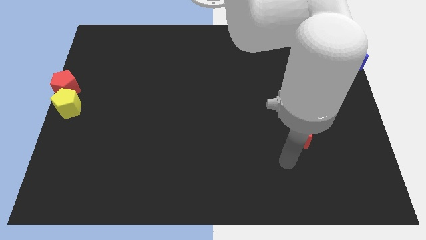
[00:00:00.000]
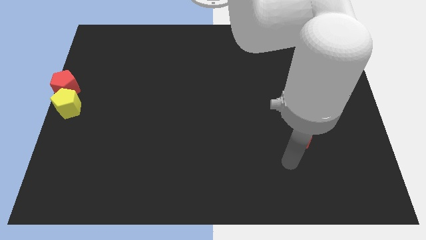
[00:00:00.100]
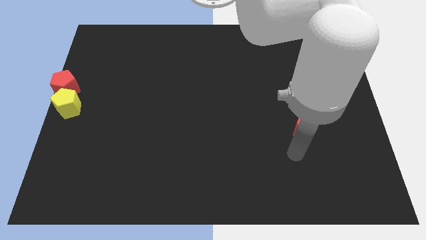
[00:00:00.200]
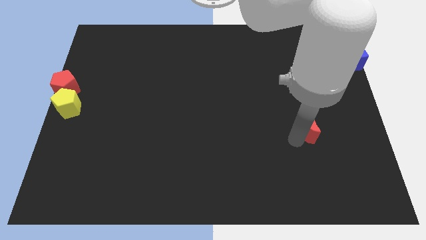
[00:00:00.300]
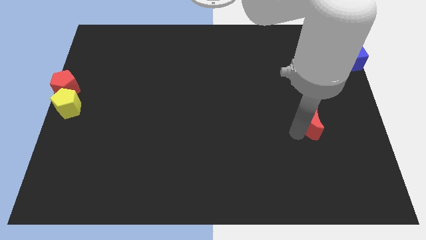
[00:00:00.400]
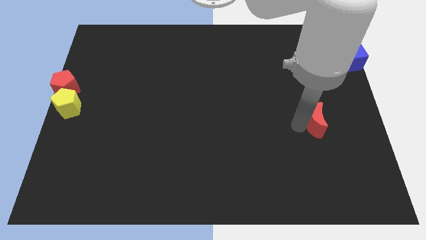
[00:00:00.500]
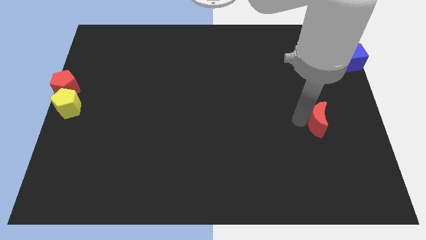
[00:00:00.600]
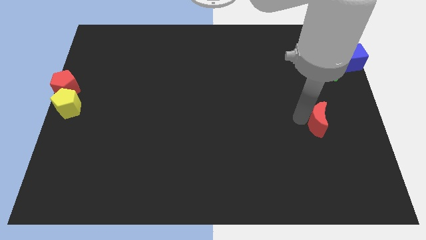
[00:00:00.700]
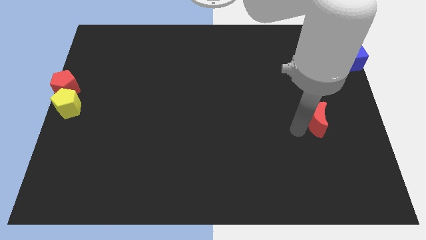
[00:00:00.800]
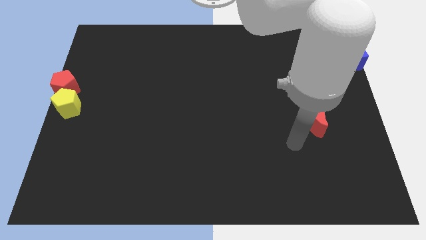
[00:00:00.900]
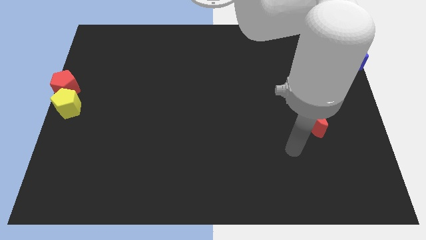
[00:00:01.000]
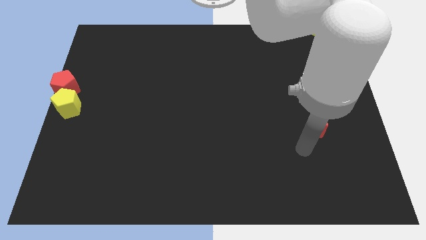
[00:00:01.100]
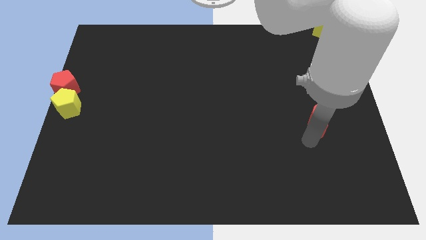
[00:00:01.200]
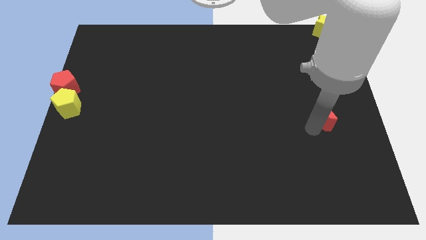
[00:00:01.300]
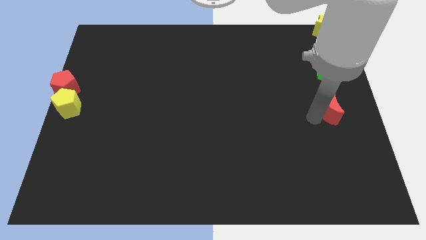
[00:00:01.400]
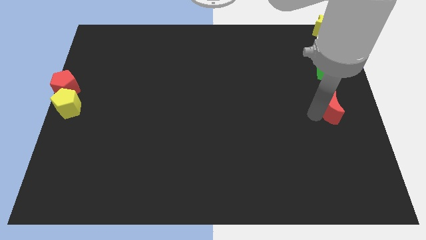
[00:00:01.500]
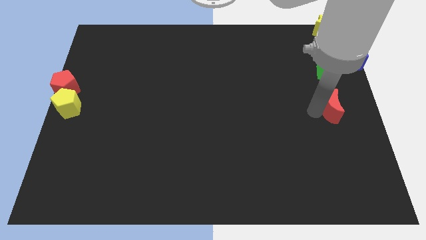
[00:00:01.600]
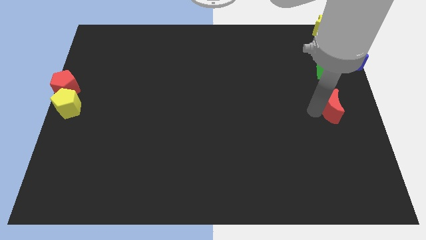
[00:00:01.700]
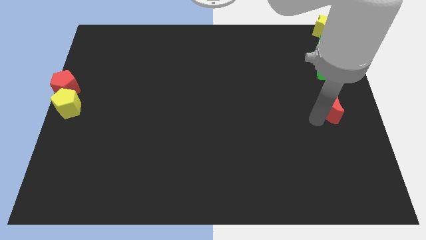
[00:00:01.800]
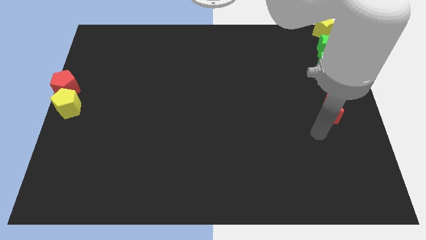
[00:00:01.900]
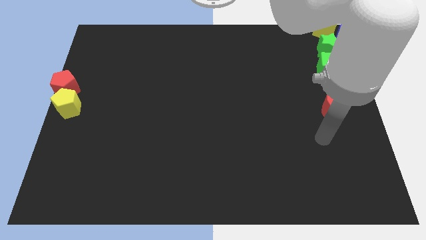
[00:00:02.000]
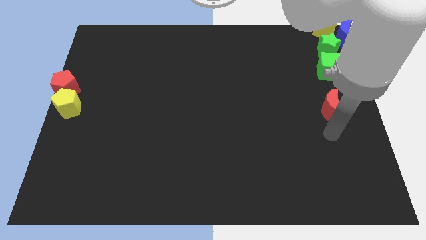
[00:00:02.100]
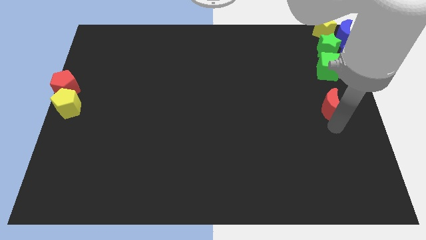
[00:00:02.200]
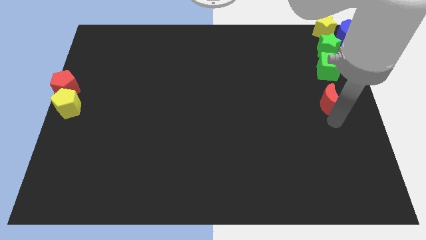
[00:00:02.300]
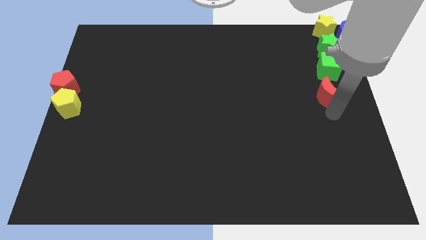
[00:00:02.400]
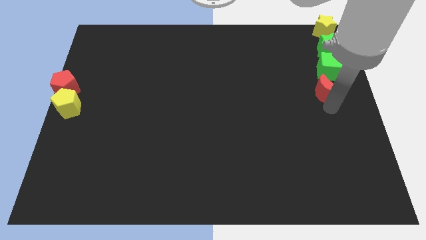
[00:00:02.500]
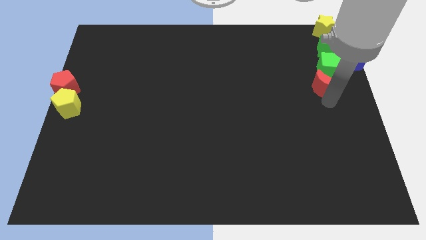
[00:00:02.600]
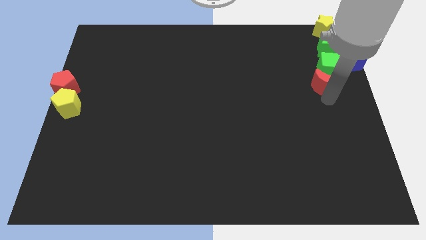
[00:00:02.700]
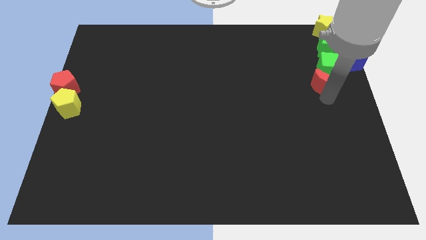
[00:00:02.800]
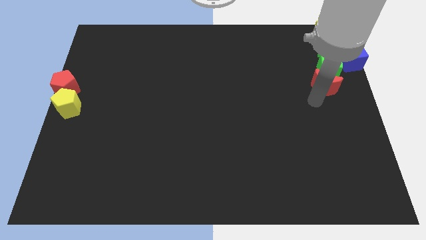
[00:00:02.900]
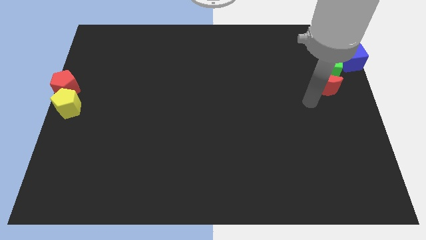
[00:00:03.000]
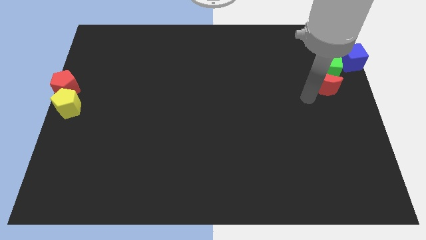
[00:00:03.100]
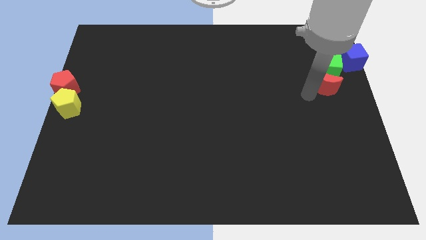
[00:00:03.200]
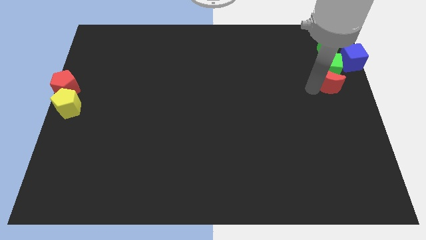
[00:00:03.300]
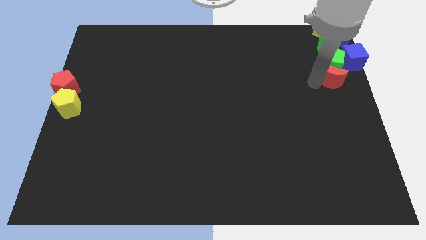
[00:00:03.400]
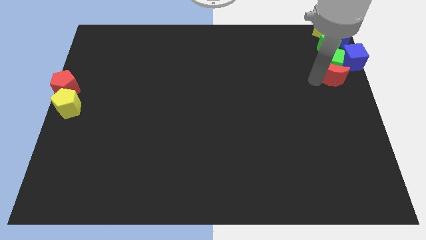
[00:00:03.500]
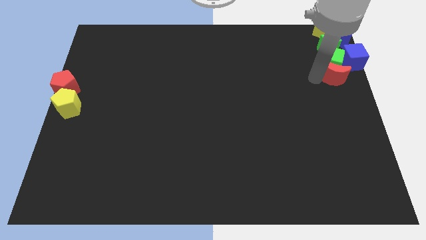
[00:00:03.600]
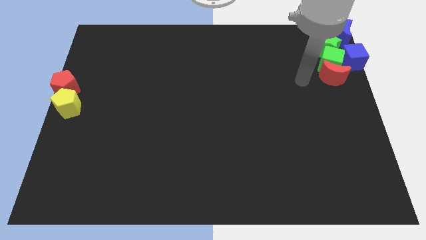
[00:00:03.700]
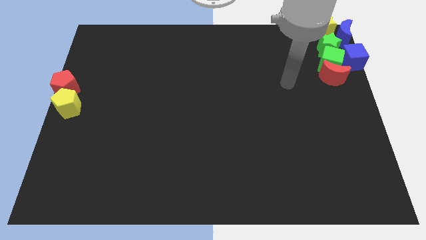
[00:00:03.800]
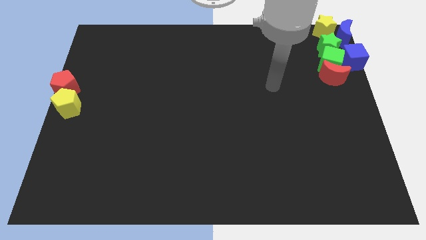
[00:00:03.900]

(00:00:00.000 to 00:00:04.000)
push the red crescent into the bottom side of the green cube

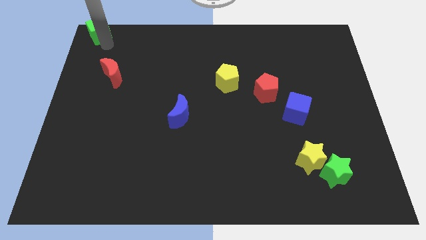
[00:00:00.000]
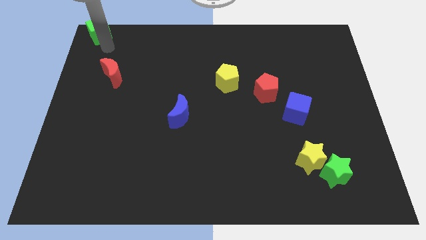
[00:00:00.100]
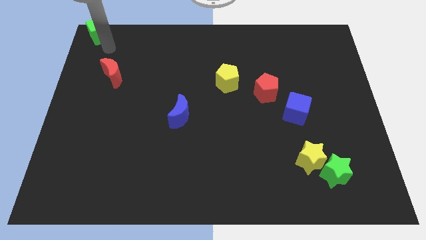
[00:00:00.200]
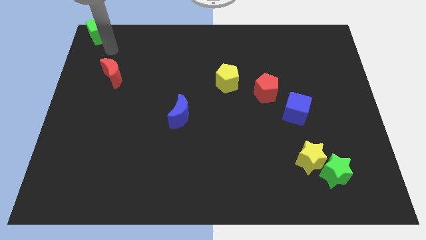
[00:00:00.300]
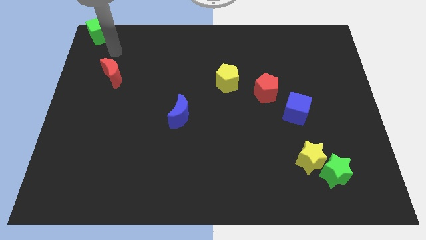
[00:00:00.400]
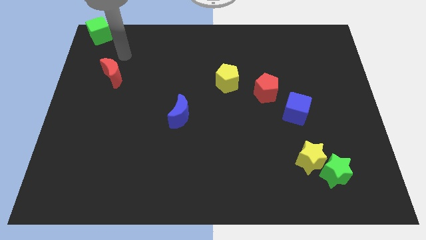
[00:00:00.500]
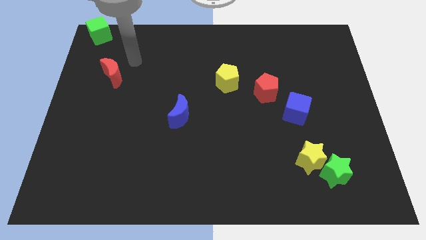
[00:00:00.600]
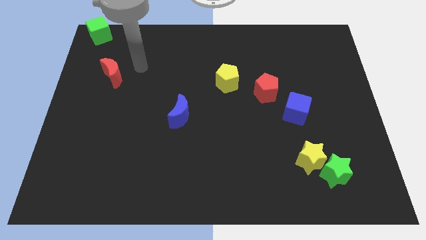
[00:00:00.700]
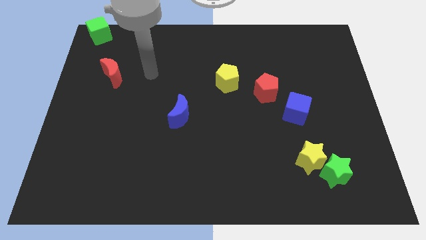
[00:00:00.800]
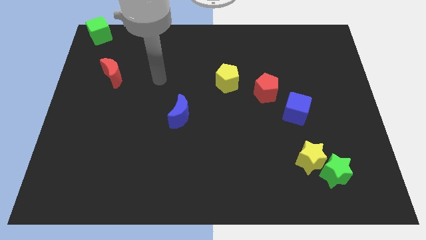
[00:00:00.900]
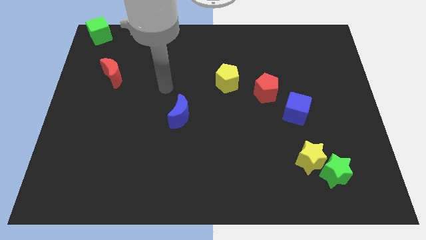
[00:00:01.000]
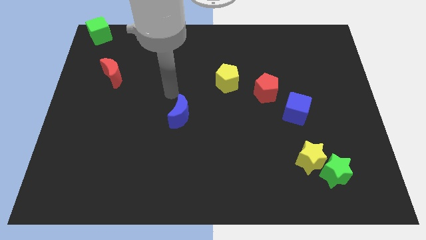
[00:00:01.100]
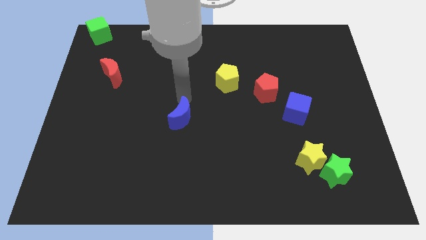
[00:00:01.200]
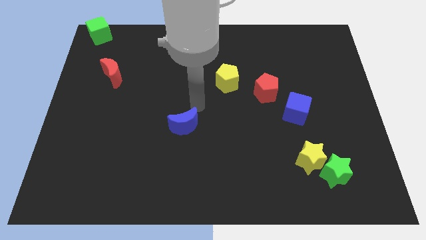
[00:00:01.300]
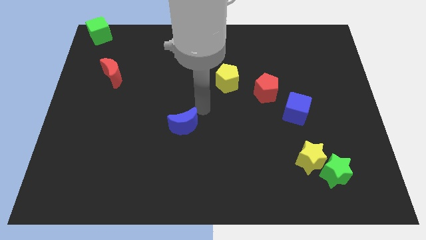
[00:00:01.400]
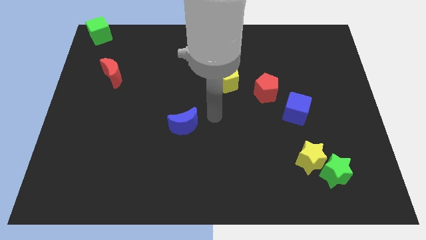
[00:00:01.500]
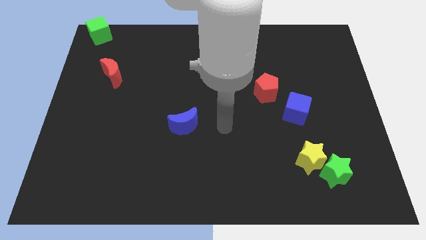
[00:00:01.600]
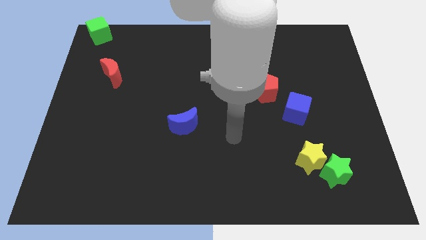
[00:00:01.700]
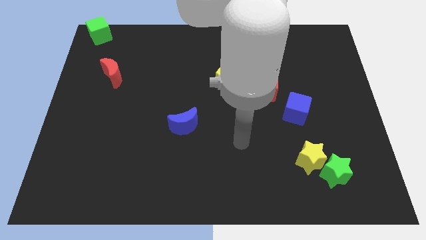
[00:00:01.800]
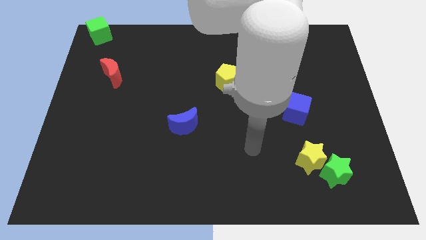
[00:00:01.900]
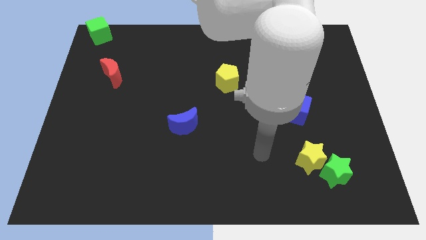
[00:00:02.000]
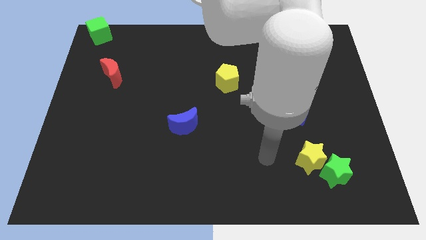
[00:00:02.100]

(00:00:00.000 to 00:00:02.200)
move arm away from green cube

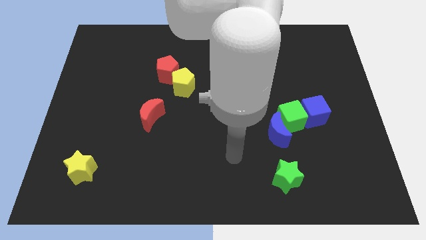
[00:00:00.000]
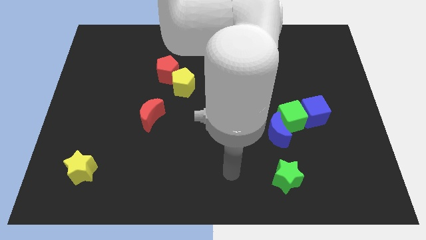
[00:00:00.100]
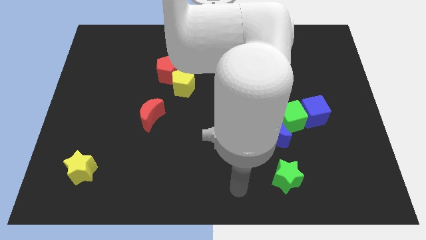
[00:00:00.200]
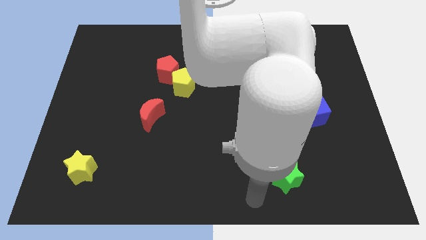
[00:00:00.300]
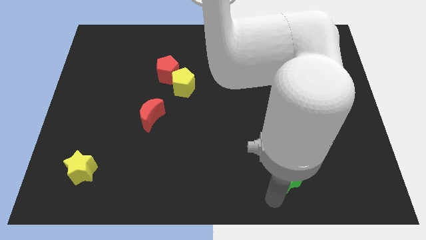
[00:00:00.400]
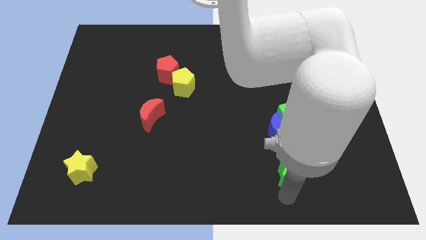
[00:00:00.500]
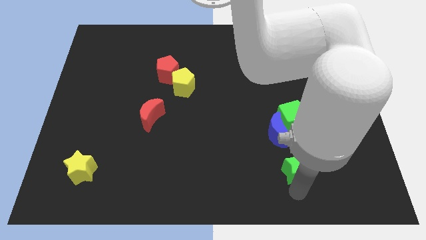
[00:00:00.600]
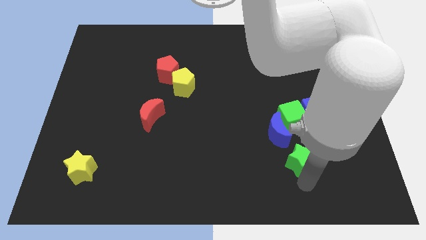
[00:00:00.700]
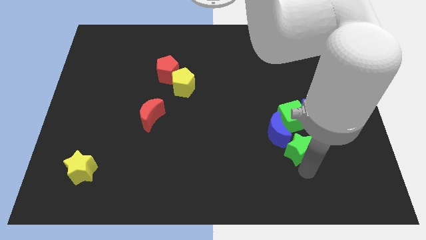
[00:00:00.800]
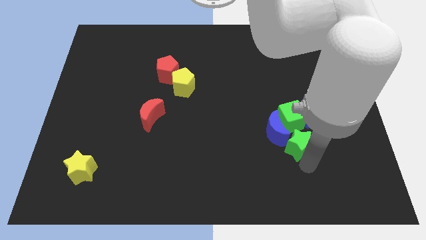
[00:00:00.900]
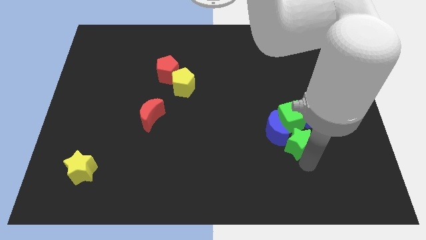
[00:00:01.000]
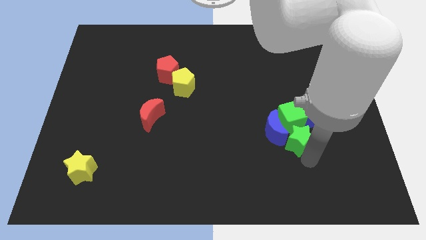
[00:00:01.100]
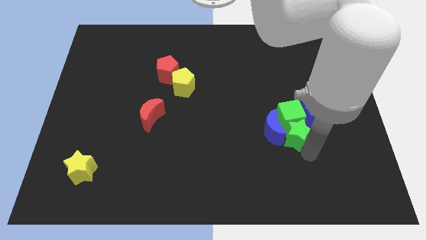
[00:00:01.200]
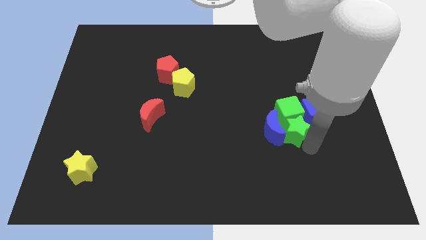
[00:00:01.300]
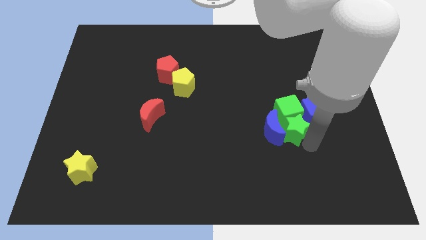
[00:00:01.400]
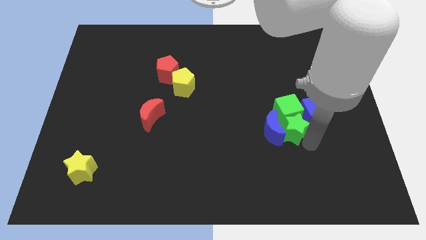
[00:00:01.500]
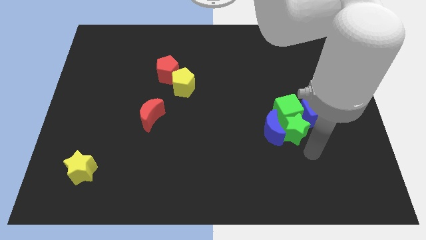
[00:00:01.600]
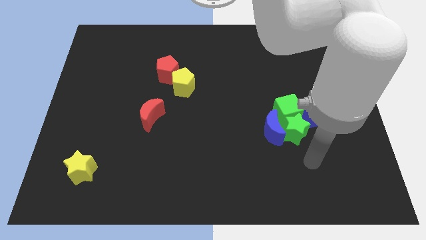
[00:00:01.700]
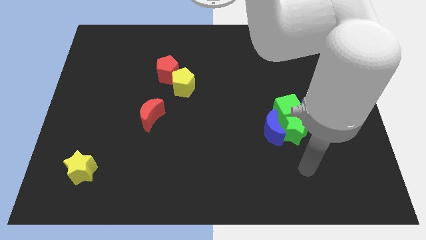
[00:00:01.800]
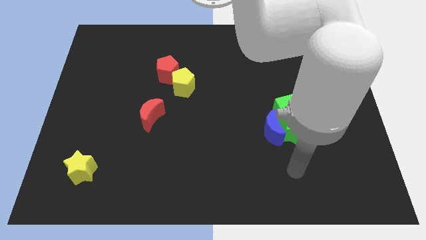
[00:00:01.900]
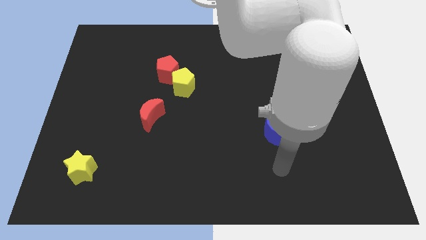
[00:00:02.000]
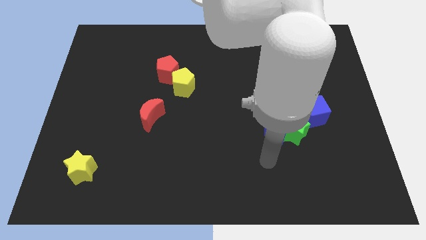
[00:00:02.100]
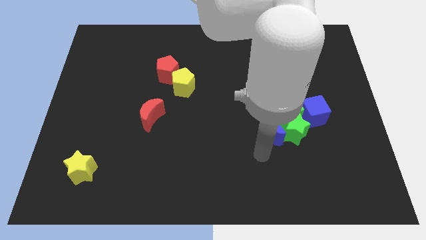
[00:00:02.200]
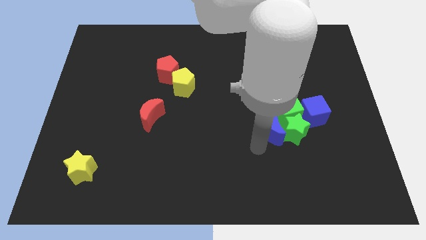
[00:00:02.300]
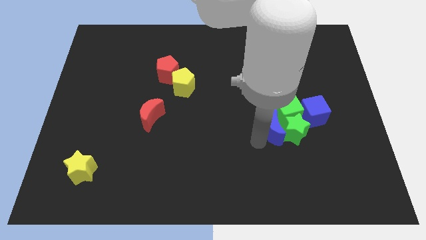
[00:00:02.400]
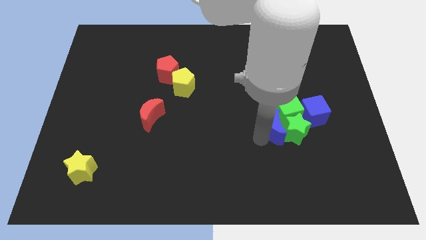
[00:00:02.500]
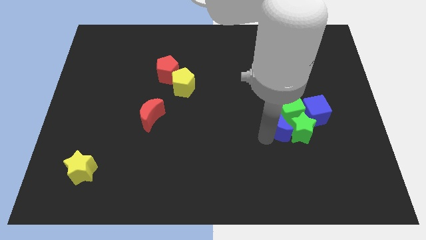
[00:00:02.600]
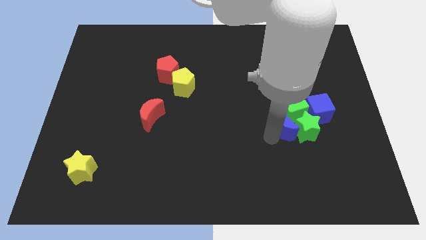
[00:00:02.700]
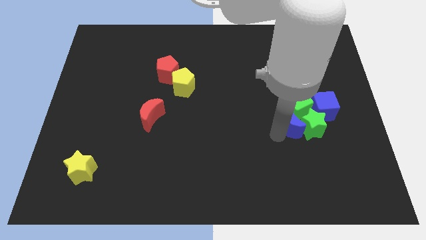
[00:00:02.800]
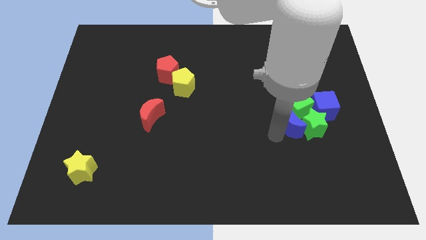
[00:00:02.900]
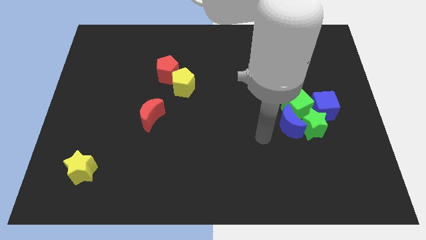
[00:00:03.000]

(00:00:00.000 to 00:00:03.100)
push blue blocks and green blocks to the right side
